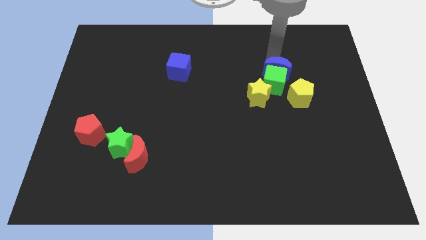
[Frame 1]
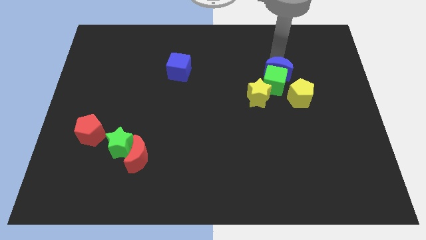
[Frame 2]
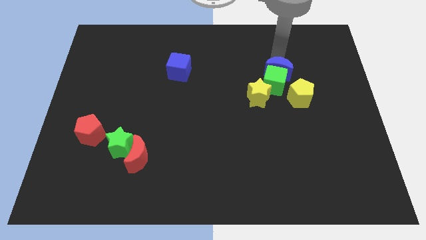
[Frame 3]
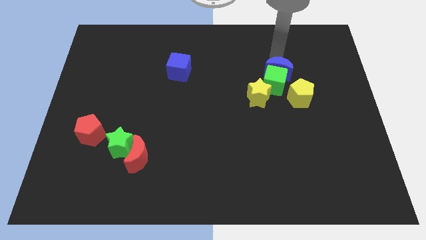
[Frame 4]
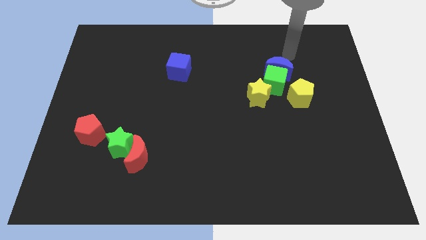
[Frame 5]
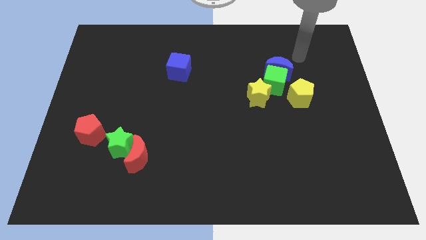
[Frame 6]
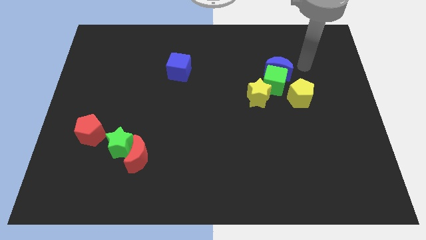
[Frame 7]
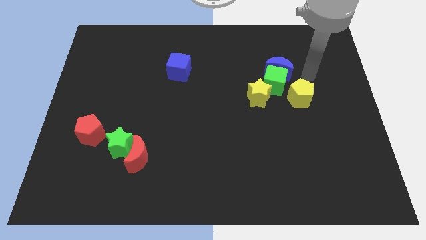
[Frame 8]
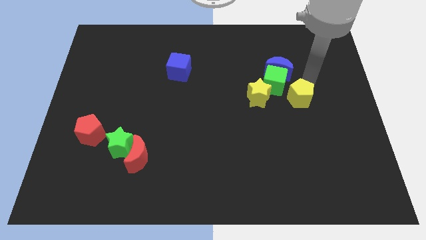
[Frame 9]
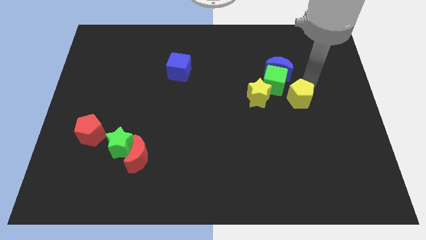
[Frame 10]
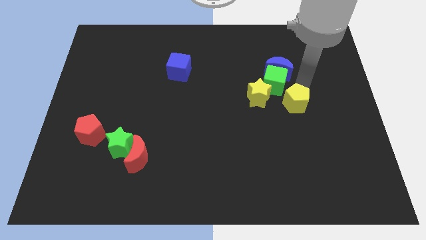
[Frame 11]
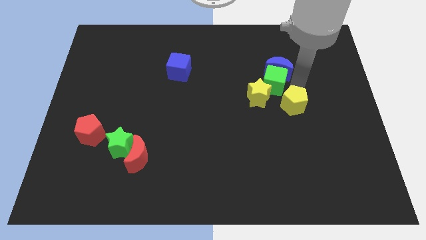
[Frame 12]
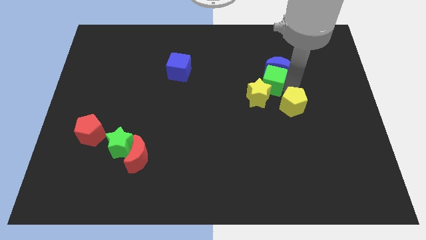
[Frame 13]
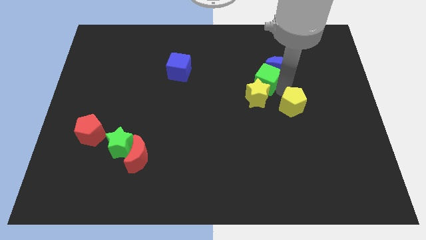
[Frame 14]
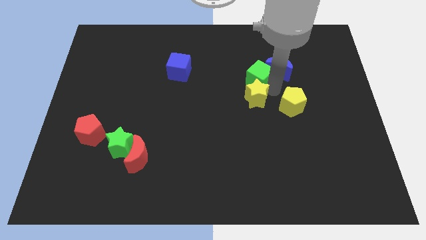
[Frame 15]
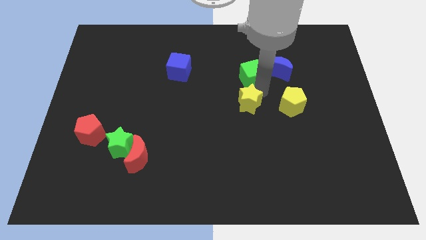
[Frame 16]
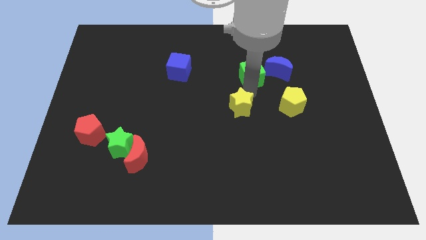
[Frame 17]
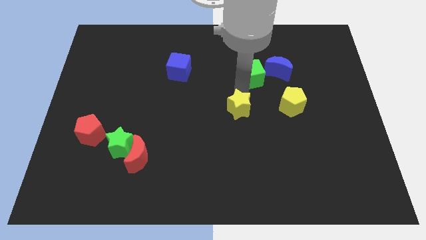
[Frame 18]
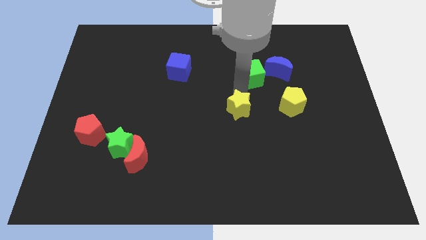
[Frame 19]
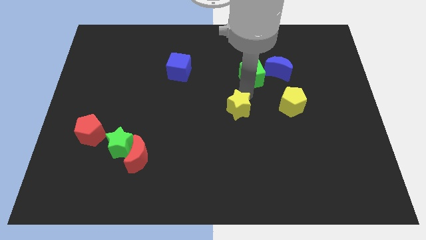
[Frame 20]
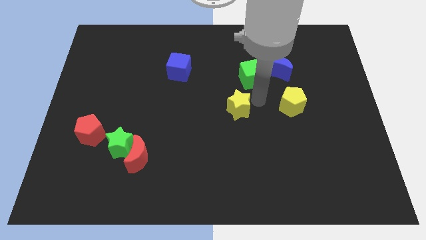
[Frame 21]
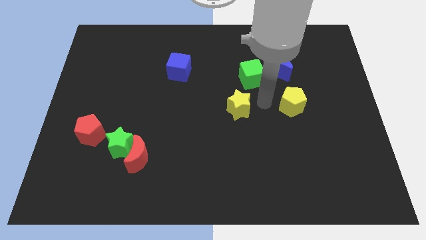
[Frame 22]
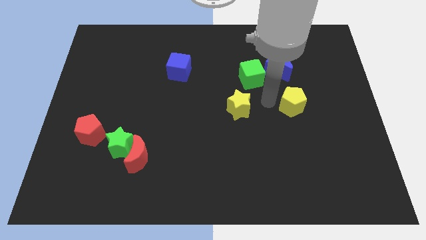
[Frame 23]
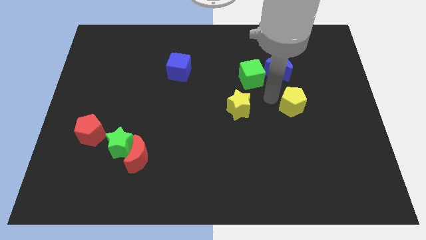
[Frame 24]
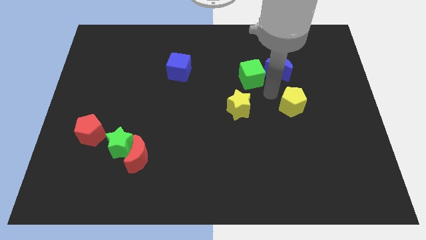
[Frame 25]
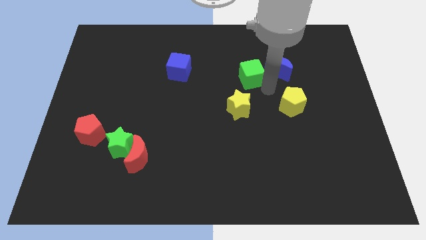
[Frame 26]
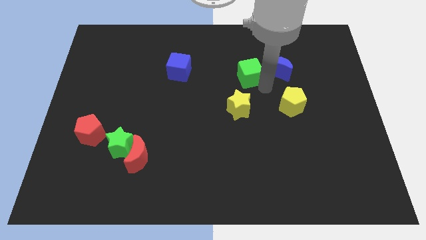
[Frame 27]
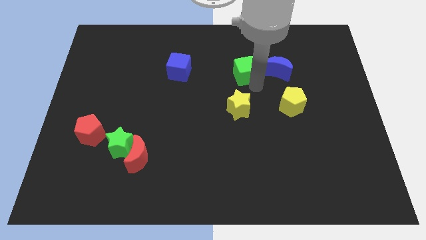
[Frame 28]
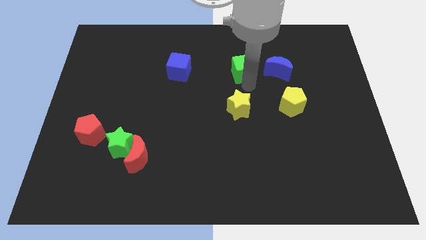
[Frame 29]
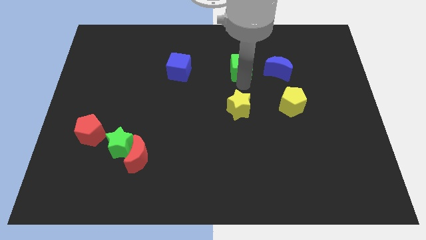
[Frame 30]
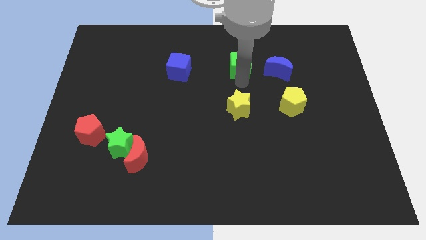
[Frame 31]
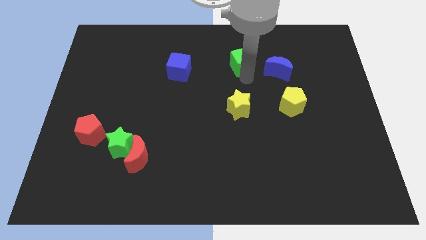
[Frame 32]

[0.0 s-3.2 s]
separate the yellow blocks and the green cube and the blue crescent

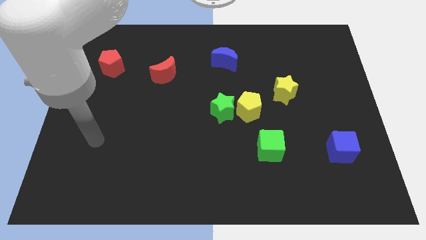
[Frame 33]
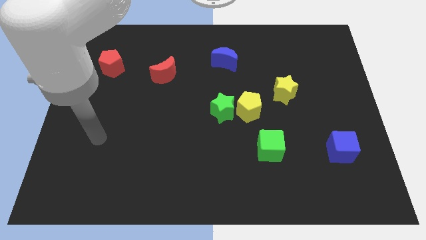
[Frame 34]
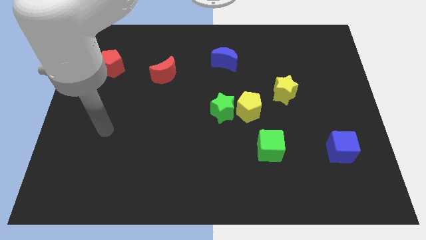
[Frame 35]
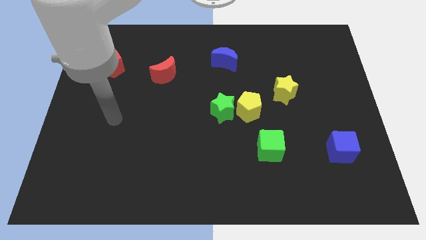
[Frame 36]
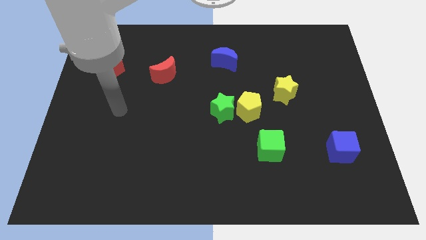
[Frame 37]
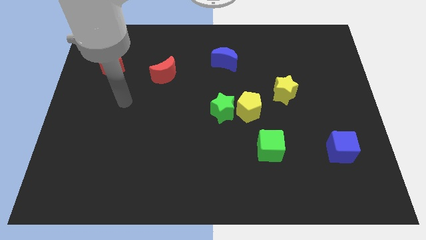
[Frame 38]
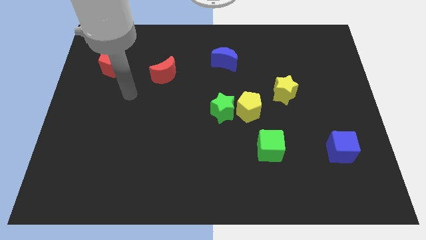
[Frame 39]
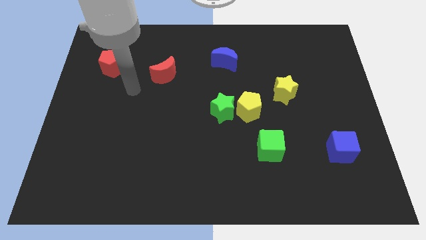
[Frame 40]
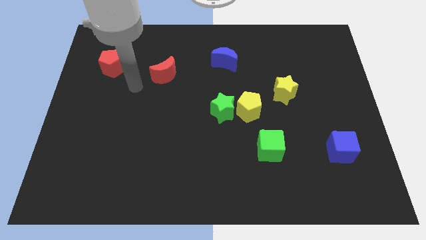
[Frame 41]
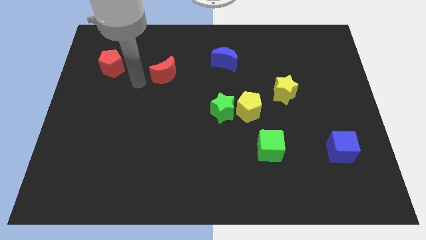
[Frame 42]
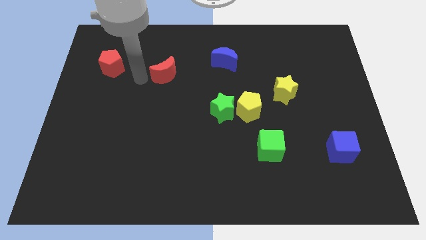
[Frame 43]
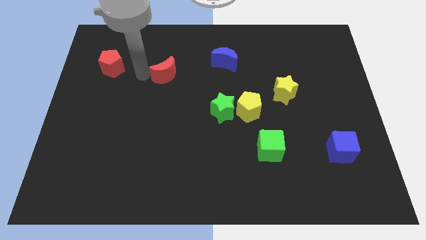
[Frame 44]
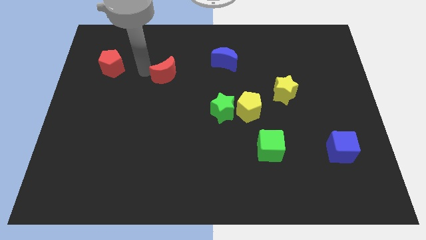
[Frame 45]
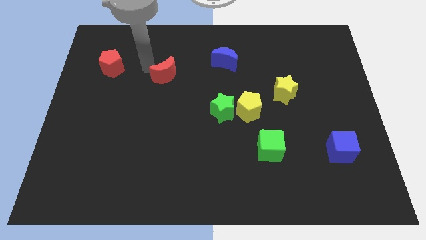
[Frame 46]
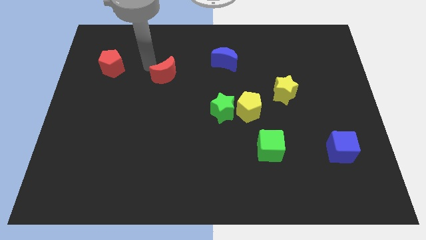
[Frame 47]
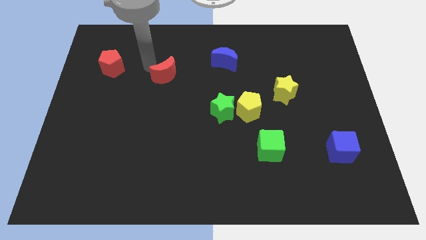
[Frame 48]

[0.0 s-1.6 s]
move your arm towards the red crescent

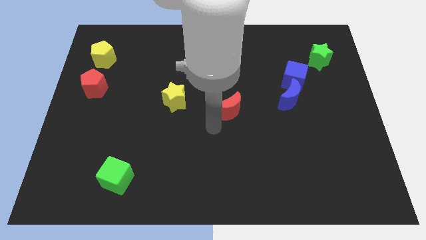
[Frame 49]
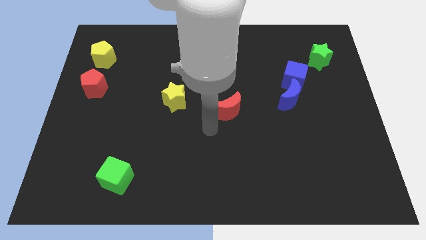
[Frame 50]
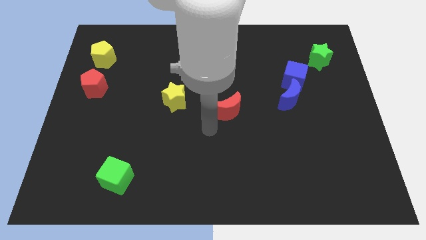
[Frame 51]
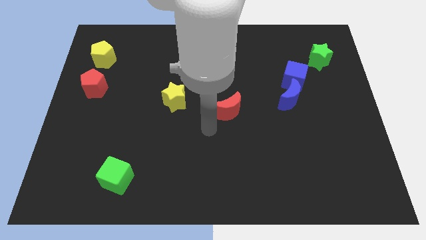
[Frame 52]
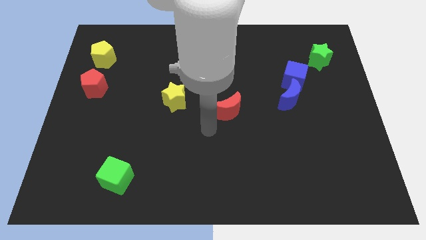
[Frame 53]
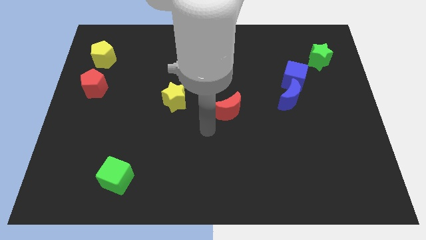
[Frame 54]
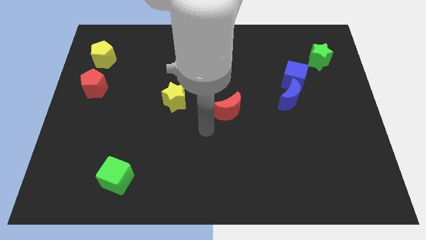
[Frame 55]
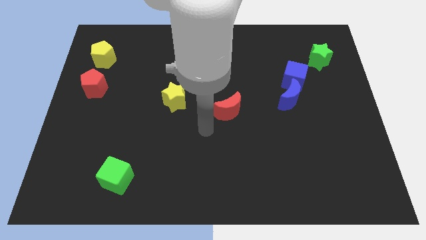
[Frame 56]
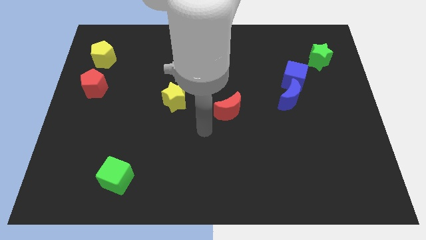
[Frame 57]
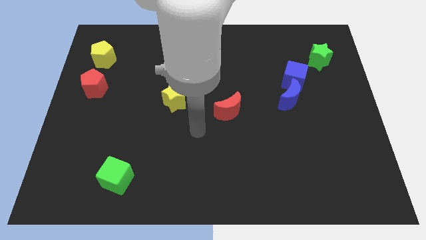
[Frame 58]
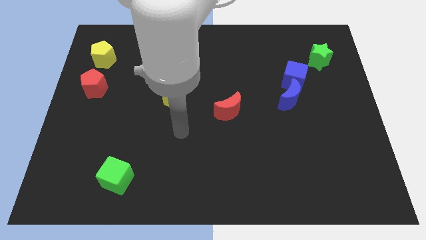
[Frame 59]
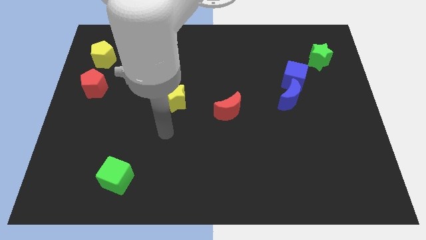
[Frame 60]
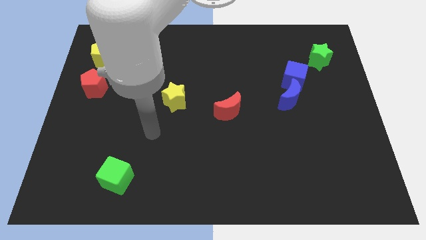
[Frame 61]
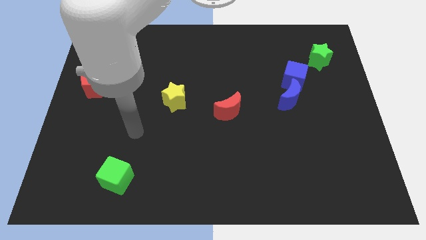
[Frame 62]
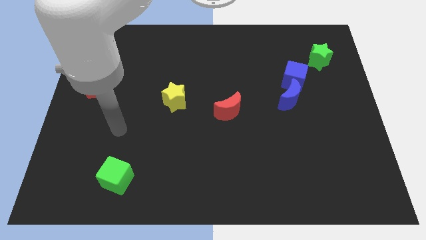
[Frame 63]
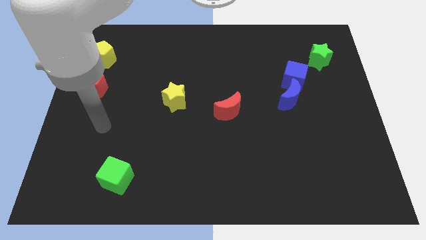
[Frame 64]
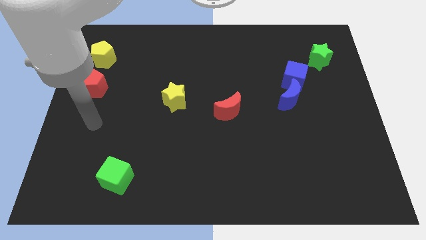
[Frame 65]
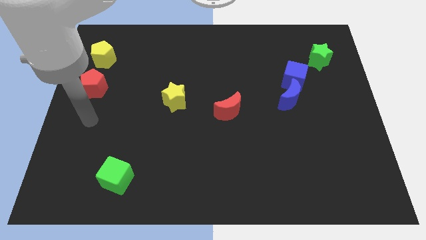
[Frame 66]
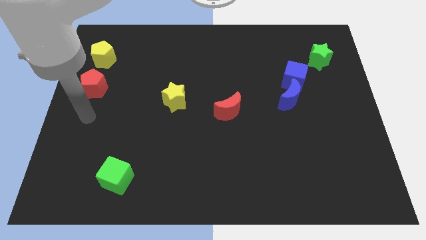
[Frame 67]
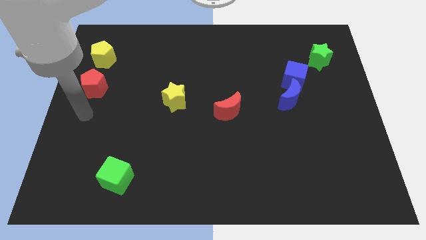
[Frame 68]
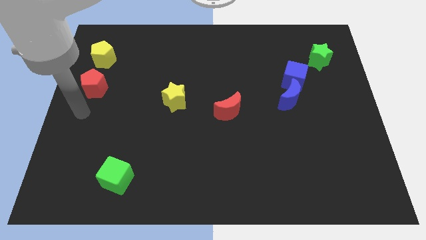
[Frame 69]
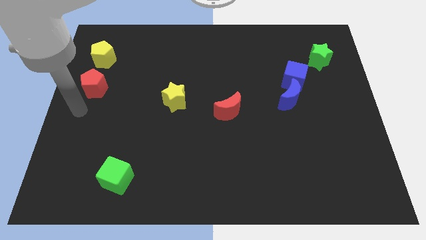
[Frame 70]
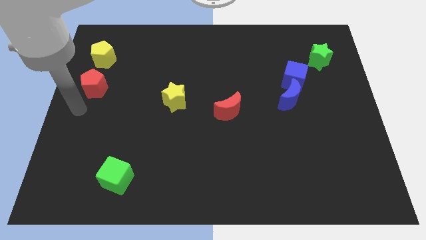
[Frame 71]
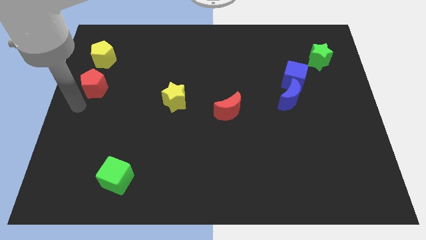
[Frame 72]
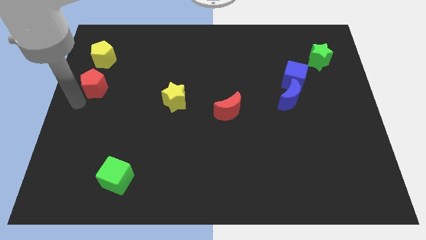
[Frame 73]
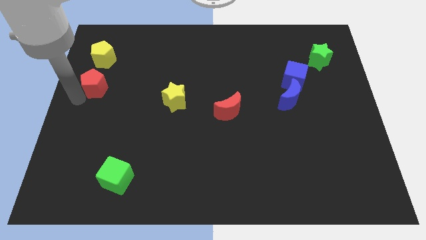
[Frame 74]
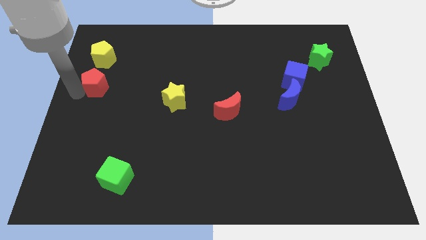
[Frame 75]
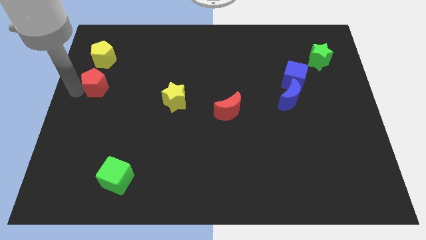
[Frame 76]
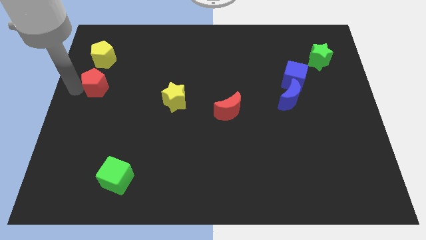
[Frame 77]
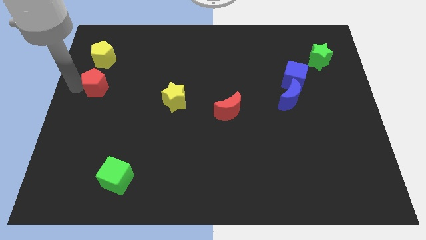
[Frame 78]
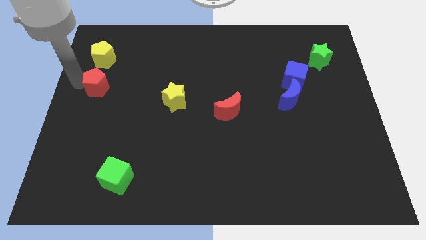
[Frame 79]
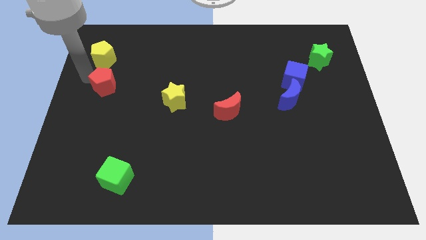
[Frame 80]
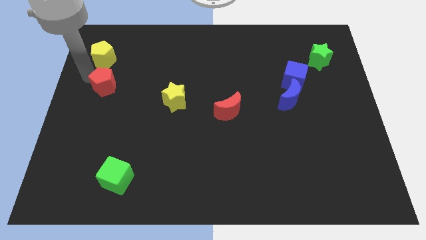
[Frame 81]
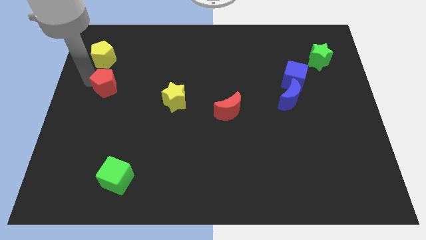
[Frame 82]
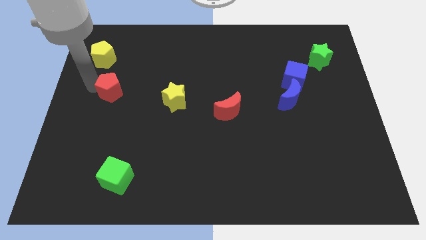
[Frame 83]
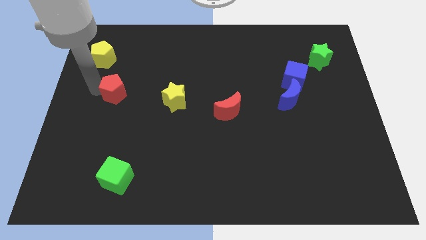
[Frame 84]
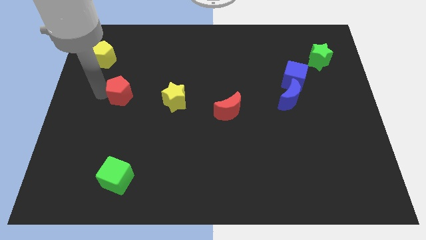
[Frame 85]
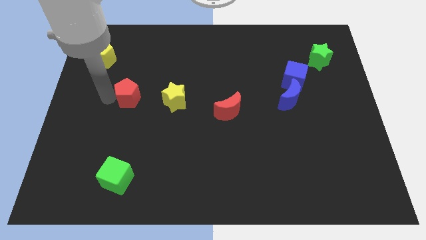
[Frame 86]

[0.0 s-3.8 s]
place the red pentagon vertically above the green cube

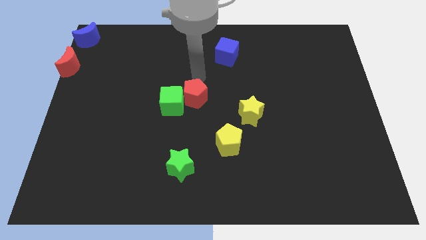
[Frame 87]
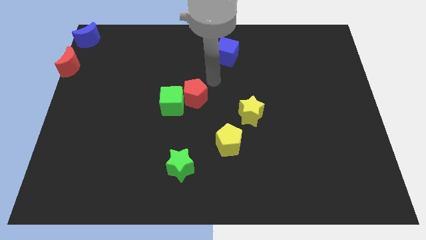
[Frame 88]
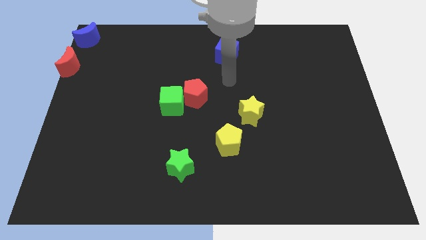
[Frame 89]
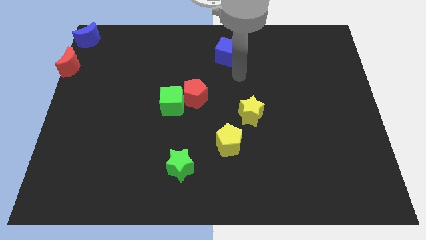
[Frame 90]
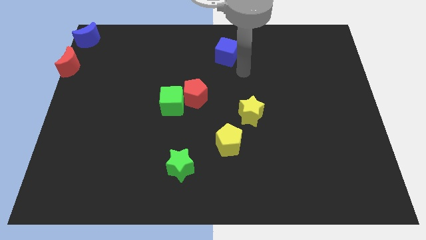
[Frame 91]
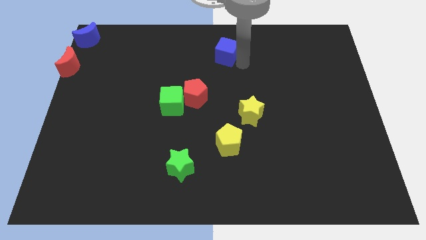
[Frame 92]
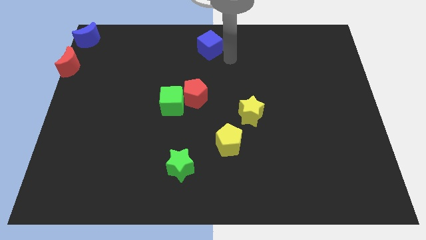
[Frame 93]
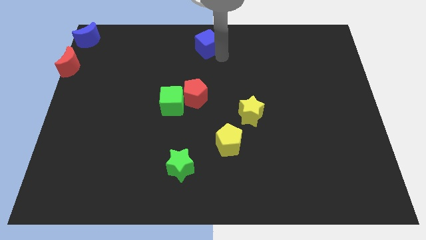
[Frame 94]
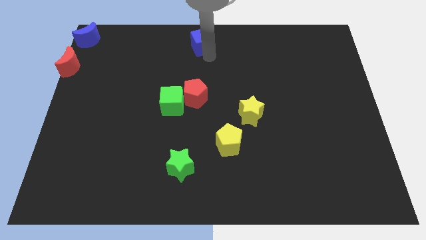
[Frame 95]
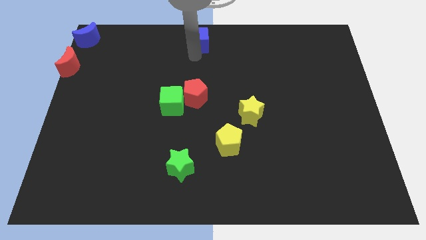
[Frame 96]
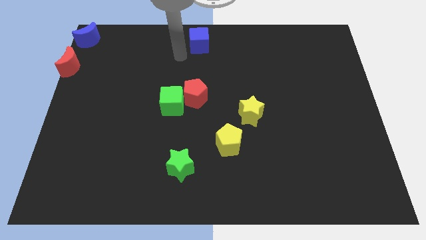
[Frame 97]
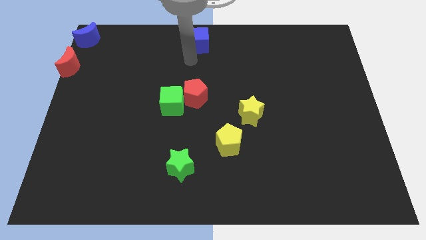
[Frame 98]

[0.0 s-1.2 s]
push the blue cube towards the top side of the board
